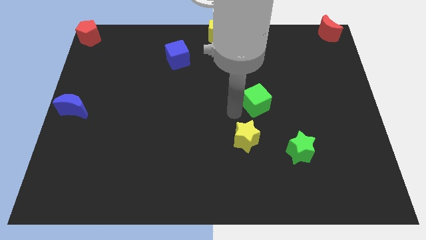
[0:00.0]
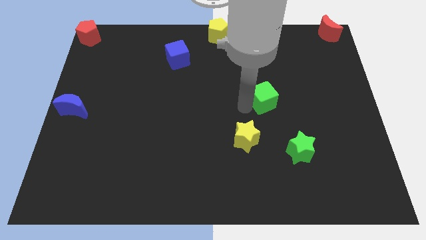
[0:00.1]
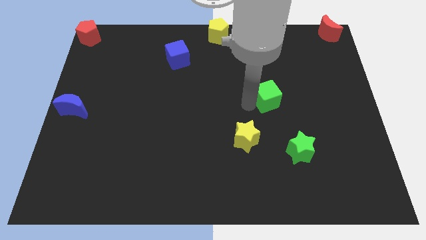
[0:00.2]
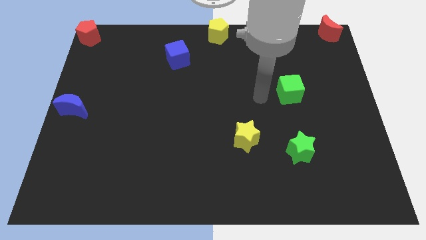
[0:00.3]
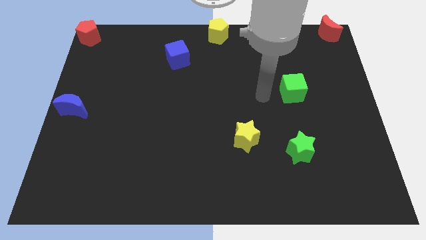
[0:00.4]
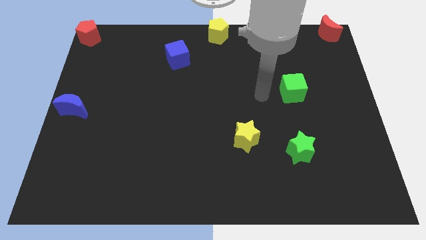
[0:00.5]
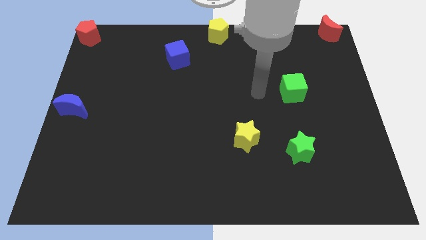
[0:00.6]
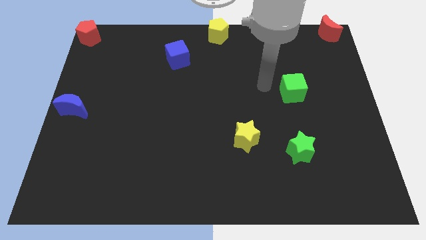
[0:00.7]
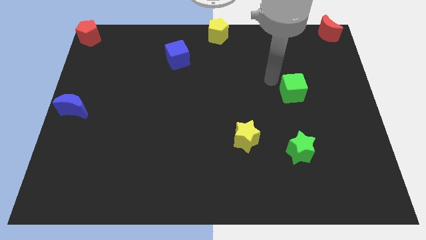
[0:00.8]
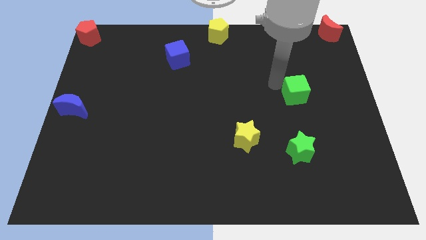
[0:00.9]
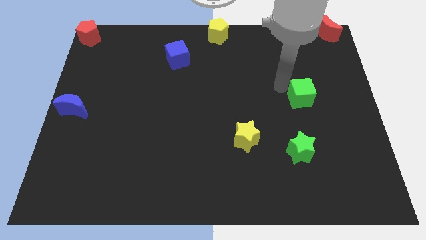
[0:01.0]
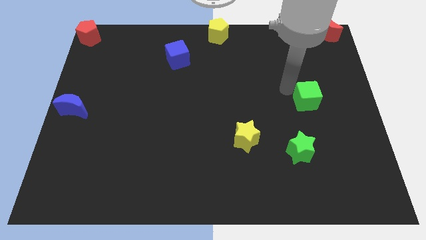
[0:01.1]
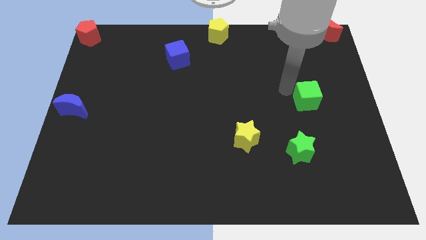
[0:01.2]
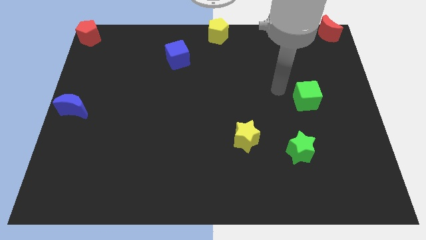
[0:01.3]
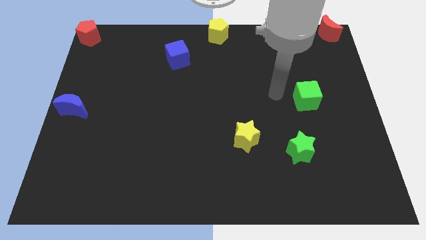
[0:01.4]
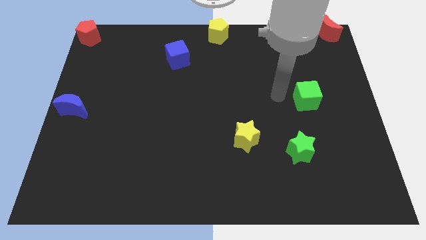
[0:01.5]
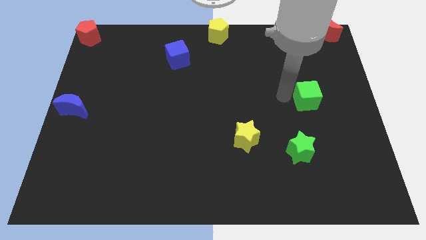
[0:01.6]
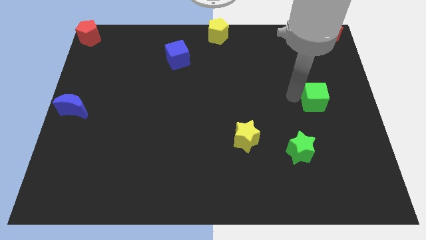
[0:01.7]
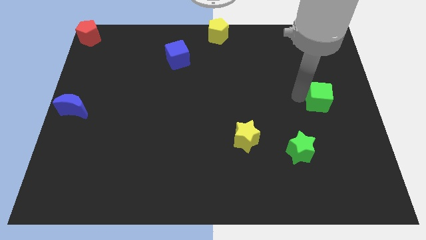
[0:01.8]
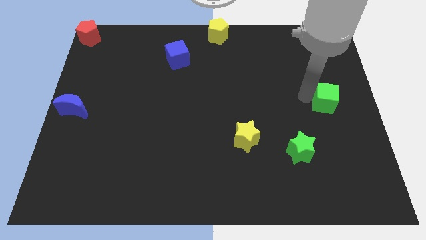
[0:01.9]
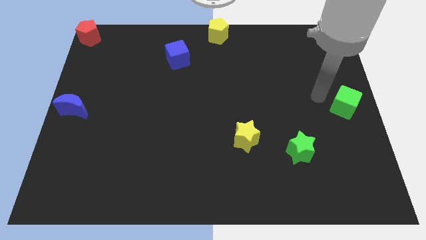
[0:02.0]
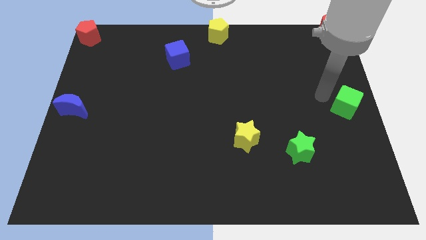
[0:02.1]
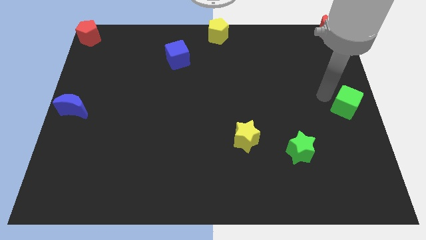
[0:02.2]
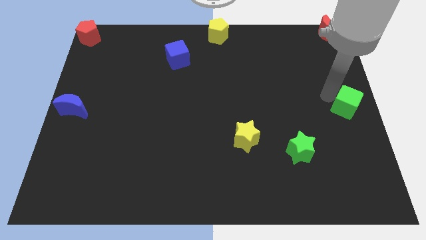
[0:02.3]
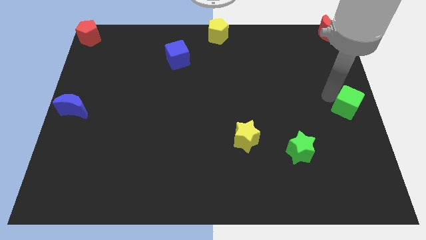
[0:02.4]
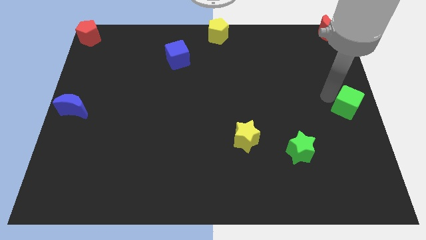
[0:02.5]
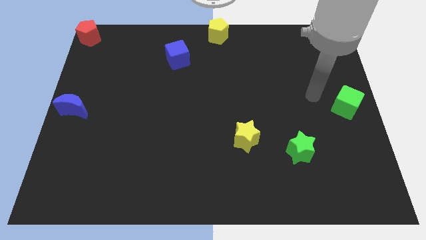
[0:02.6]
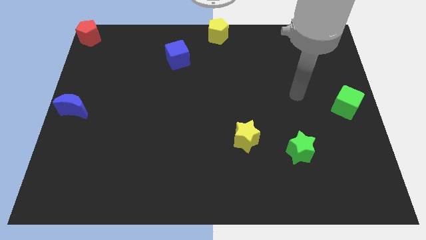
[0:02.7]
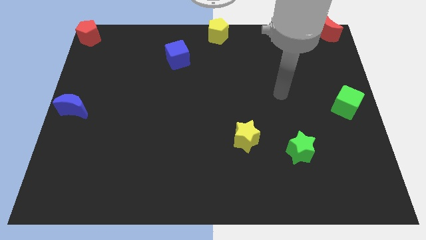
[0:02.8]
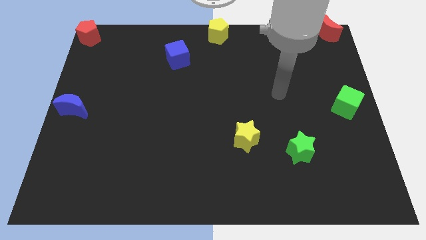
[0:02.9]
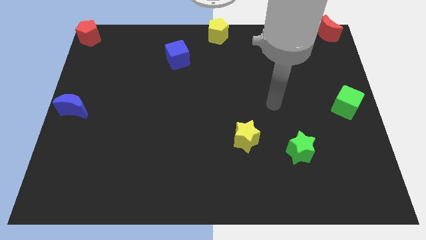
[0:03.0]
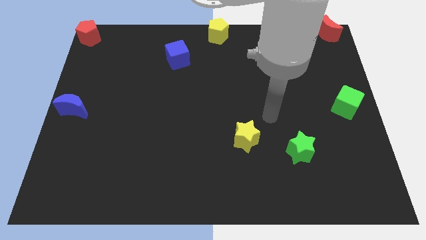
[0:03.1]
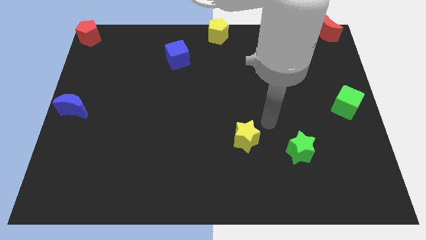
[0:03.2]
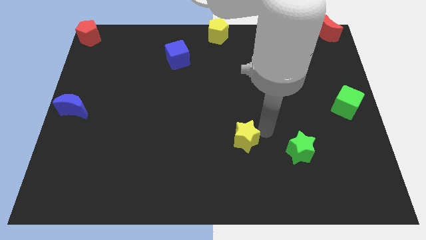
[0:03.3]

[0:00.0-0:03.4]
slide the green cube to the centre right of the board

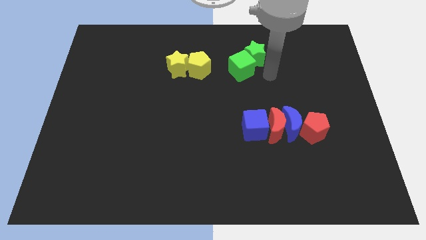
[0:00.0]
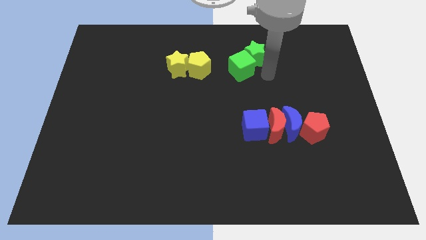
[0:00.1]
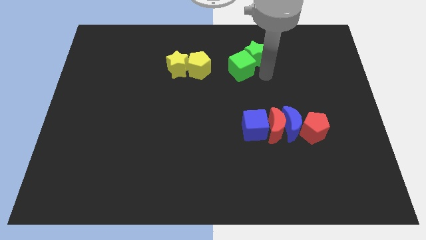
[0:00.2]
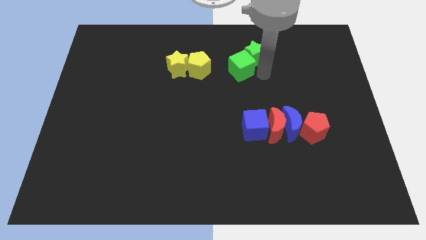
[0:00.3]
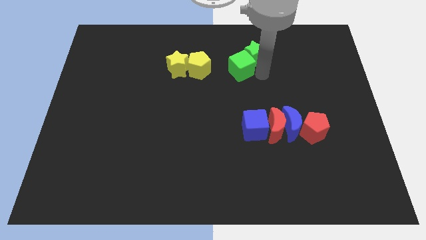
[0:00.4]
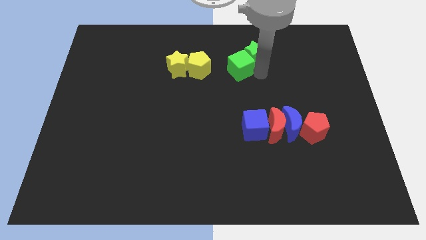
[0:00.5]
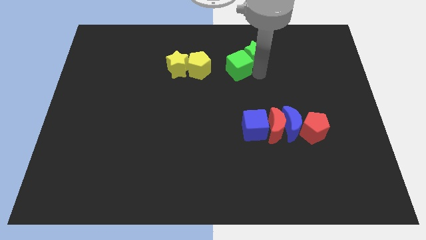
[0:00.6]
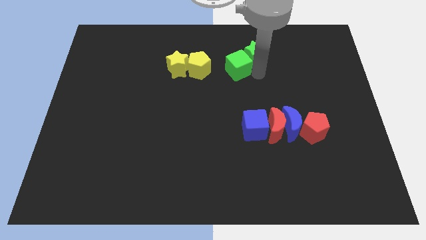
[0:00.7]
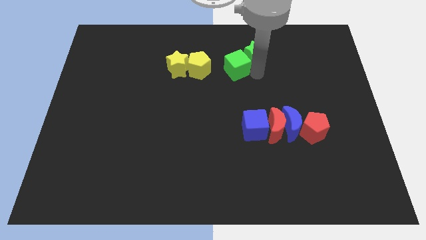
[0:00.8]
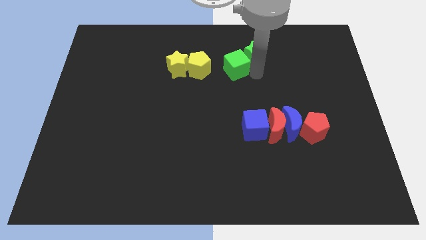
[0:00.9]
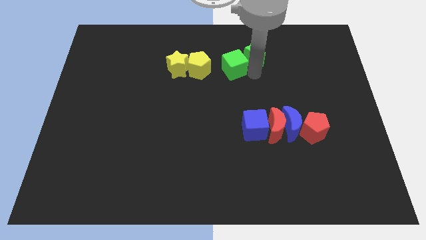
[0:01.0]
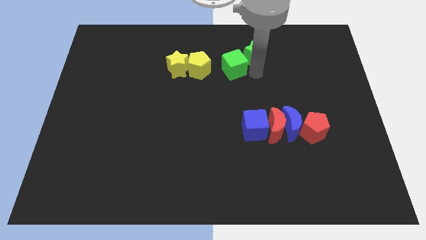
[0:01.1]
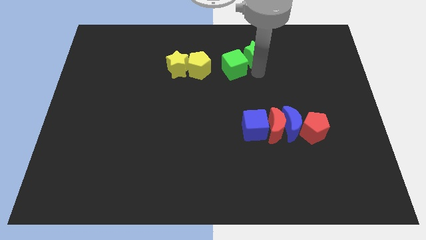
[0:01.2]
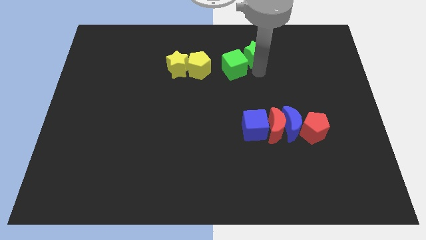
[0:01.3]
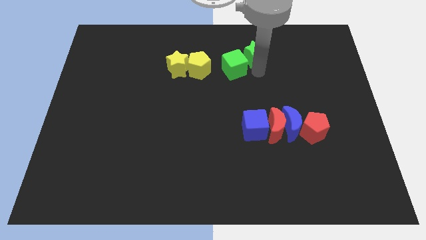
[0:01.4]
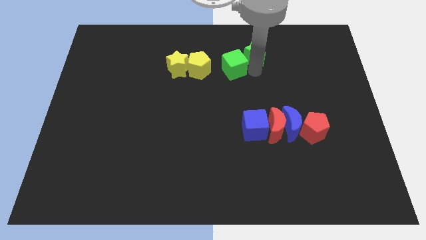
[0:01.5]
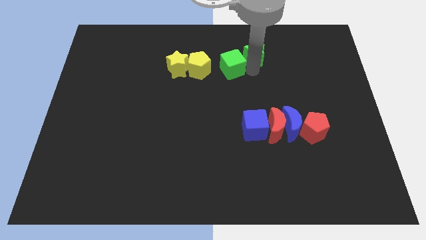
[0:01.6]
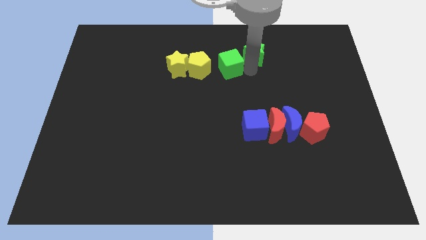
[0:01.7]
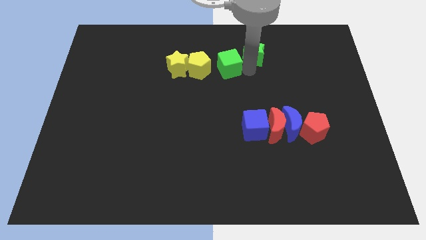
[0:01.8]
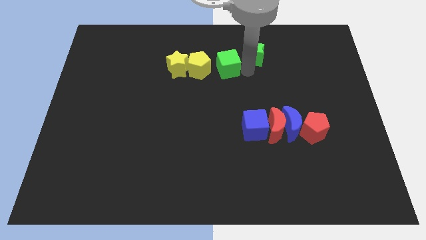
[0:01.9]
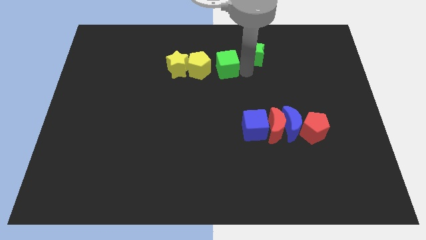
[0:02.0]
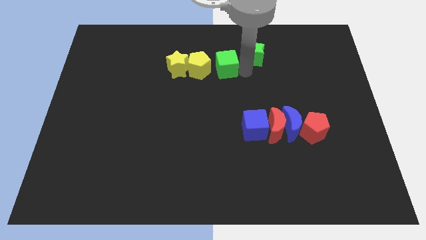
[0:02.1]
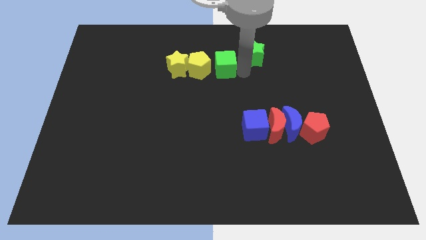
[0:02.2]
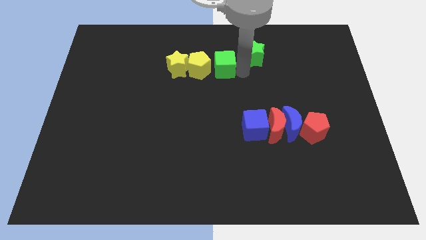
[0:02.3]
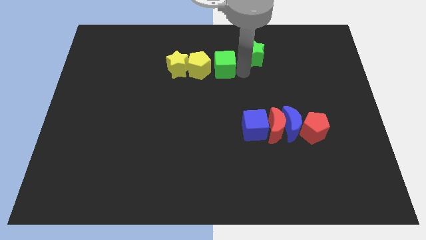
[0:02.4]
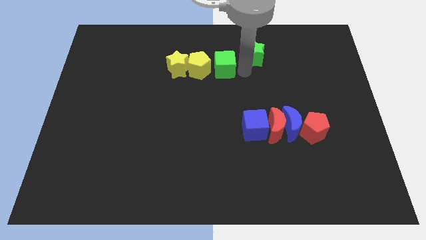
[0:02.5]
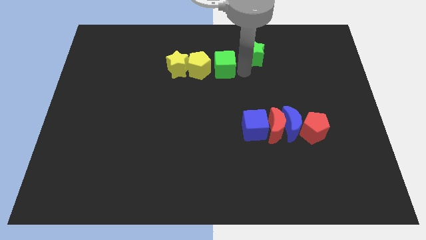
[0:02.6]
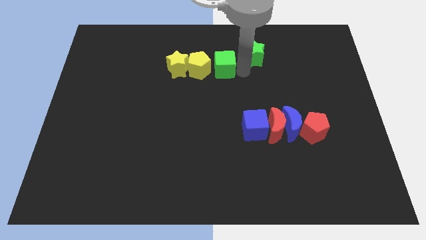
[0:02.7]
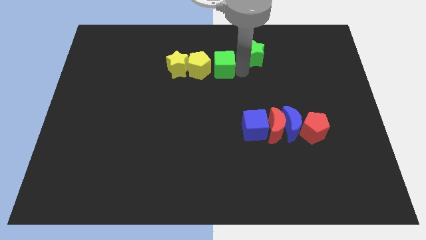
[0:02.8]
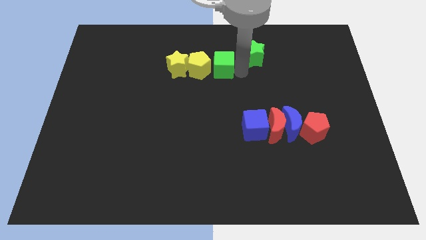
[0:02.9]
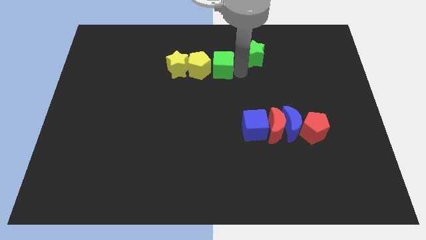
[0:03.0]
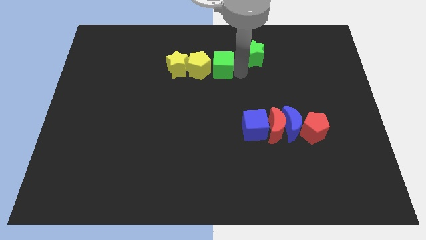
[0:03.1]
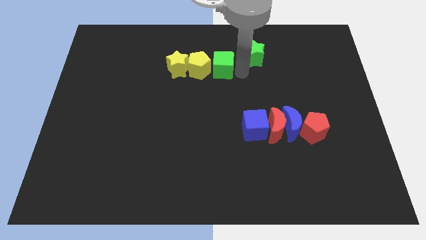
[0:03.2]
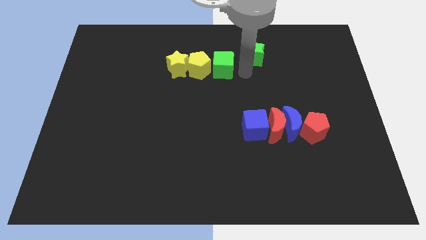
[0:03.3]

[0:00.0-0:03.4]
push the green cube close to the yellow pentagon

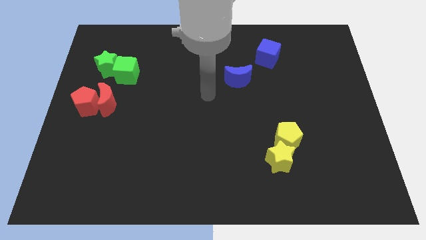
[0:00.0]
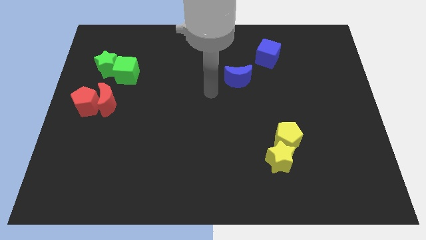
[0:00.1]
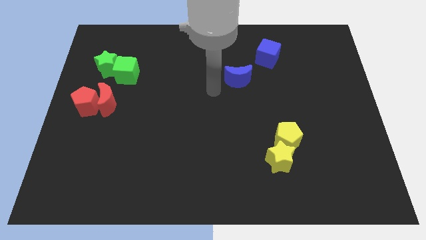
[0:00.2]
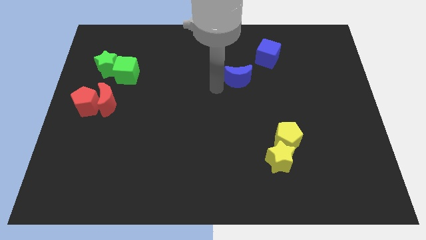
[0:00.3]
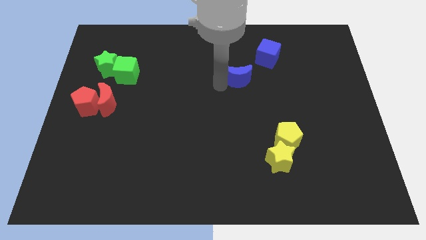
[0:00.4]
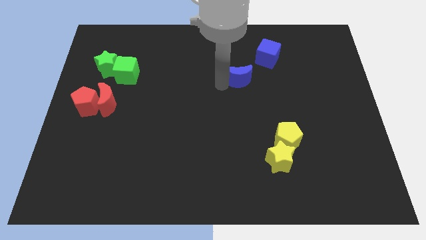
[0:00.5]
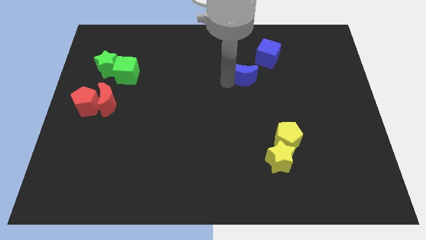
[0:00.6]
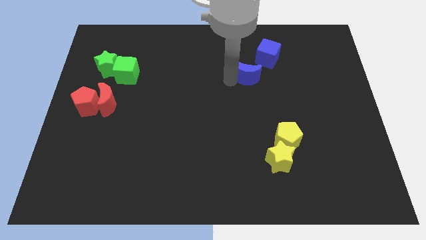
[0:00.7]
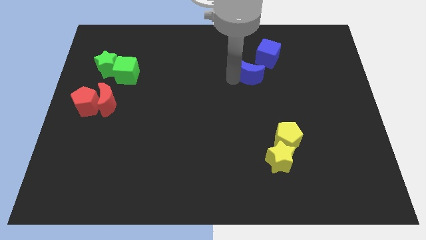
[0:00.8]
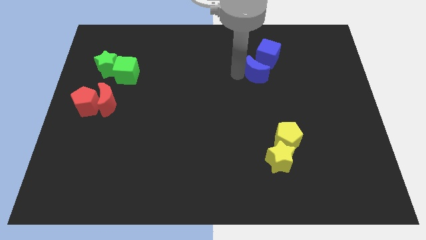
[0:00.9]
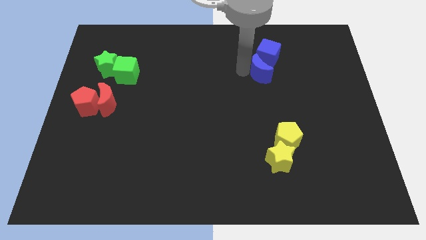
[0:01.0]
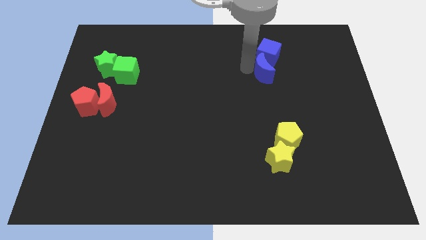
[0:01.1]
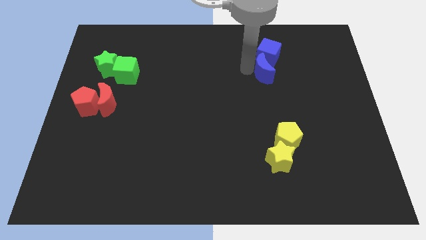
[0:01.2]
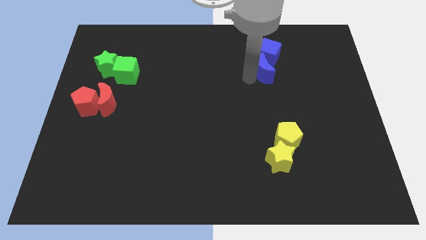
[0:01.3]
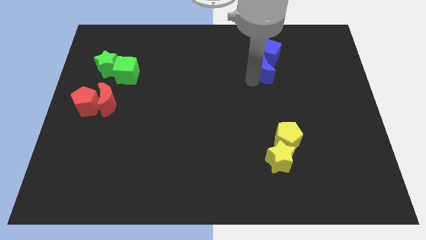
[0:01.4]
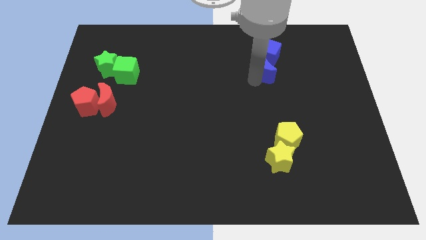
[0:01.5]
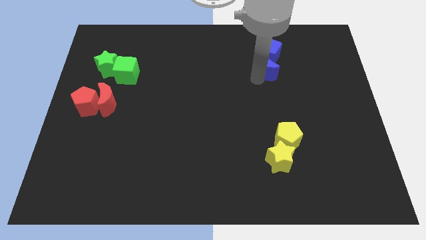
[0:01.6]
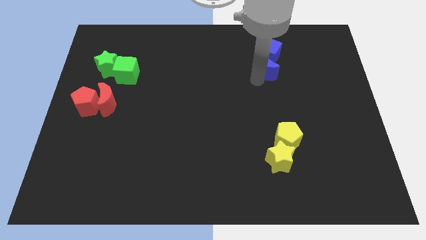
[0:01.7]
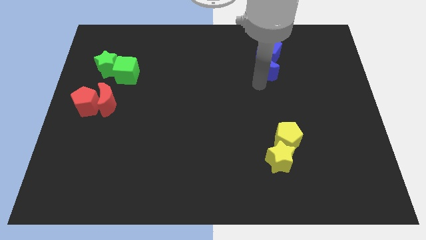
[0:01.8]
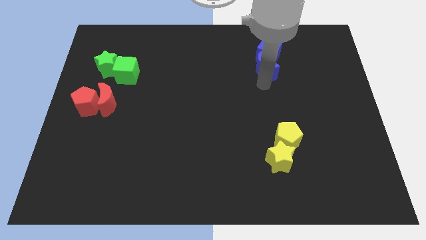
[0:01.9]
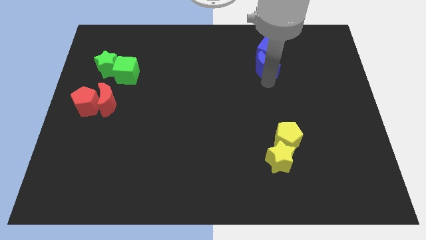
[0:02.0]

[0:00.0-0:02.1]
push the blue moon into the blue cube

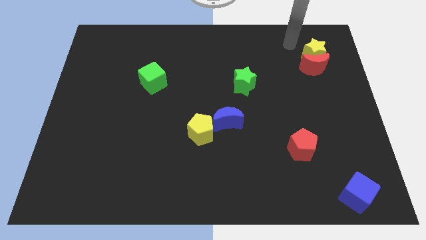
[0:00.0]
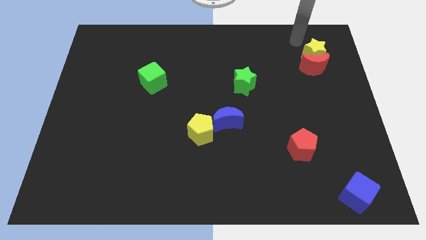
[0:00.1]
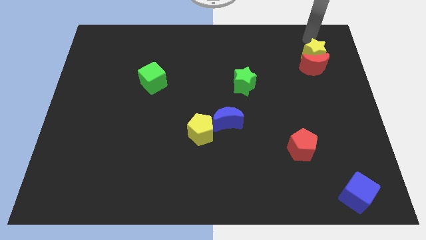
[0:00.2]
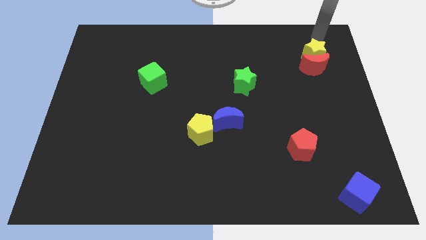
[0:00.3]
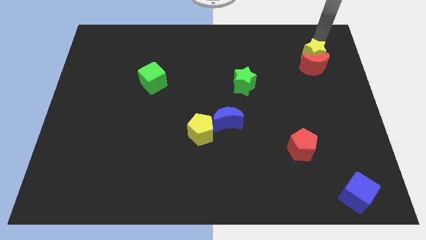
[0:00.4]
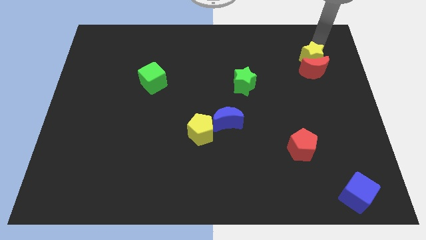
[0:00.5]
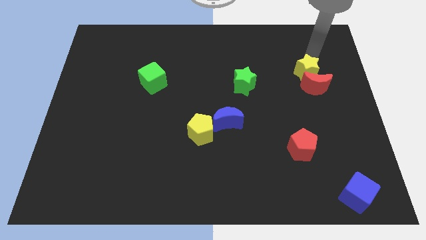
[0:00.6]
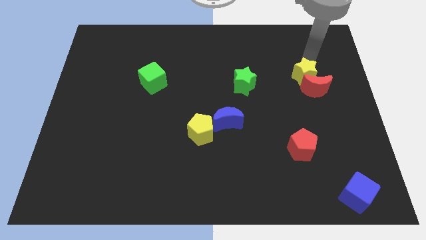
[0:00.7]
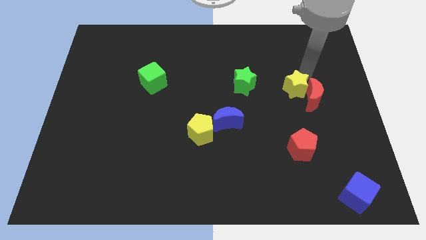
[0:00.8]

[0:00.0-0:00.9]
push the yellow star to the right side of the green star
